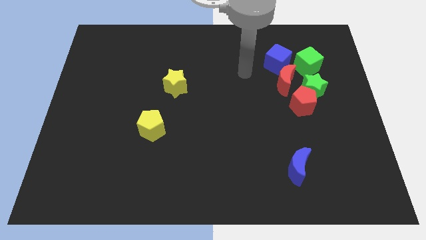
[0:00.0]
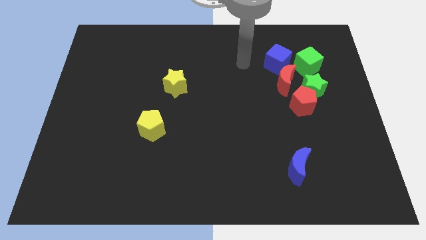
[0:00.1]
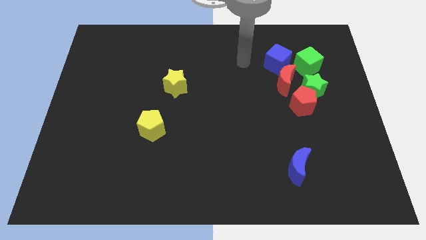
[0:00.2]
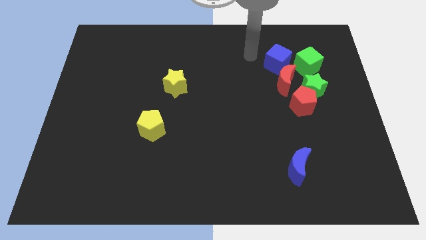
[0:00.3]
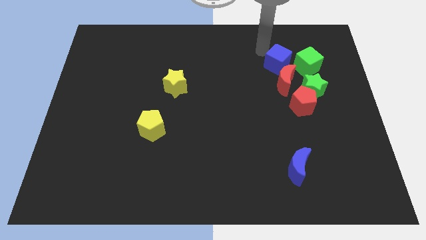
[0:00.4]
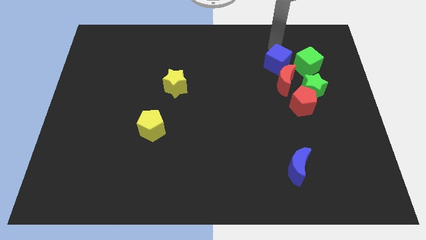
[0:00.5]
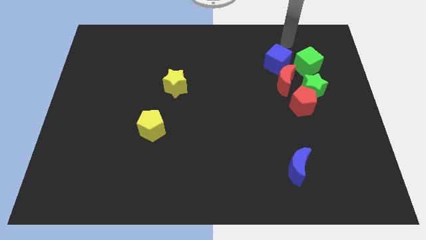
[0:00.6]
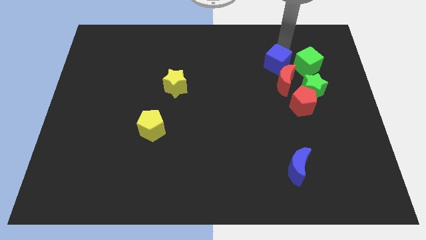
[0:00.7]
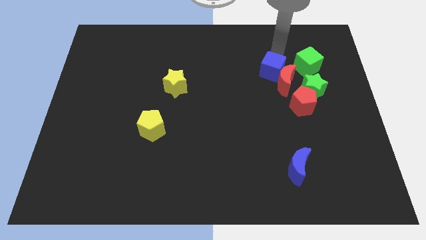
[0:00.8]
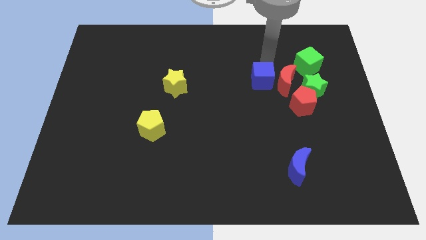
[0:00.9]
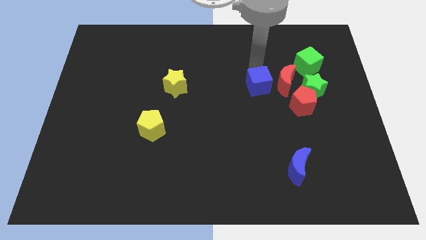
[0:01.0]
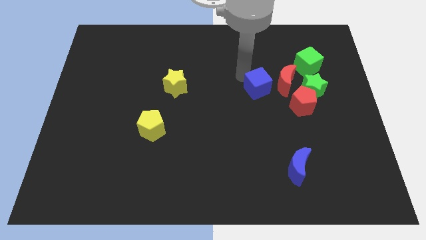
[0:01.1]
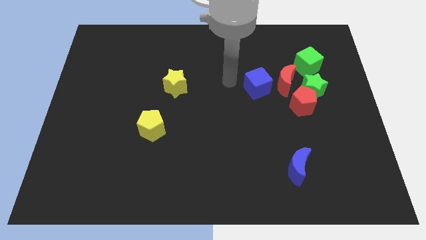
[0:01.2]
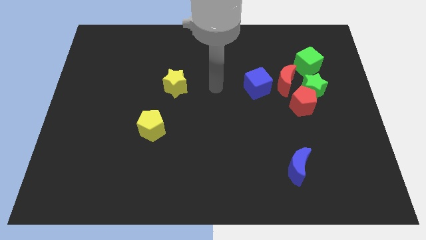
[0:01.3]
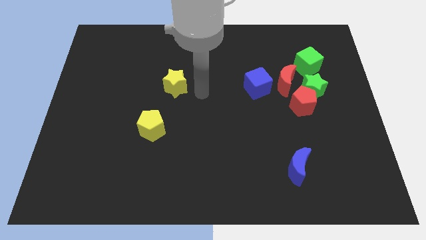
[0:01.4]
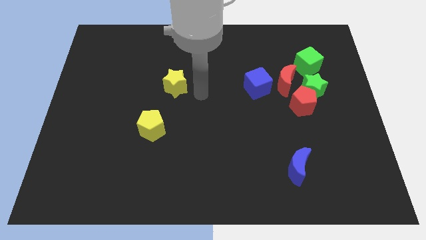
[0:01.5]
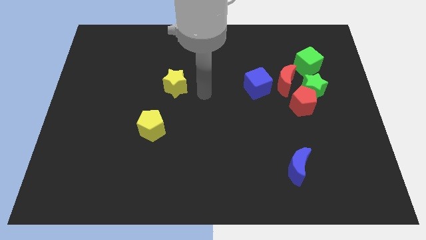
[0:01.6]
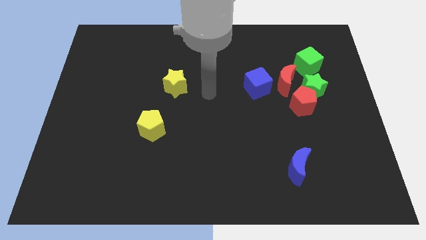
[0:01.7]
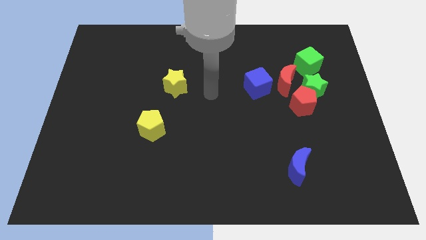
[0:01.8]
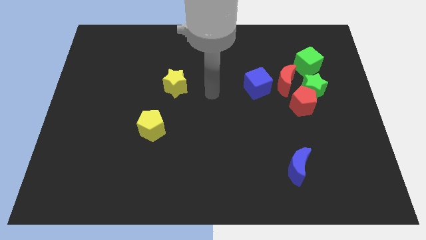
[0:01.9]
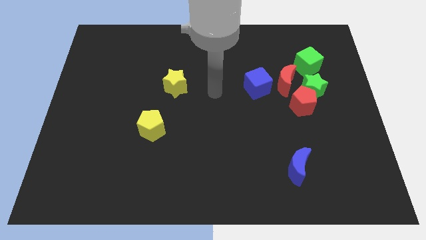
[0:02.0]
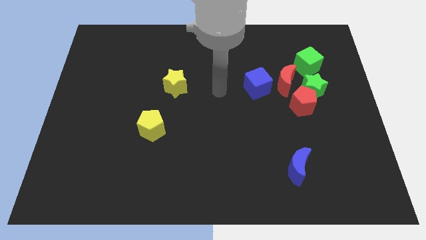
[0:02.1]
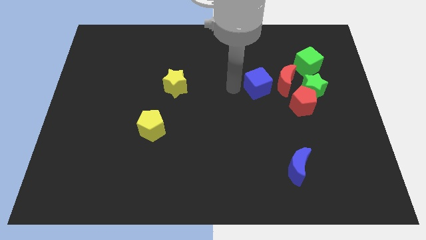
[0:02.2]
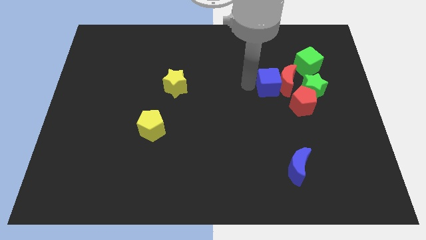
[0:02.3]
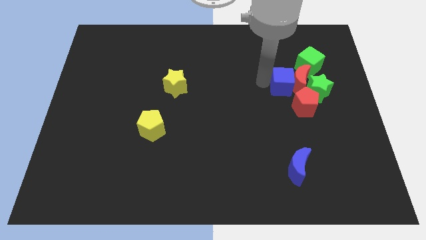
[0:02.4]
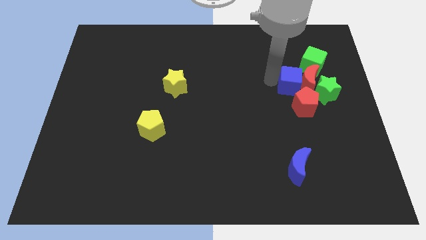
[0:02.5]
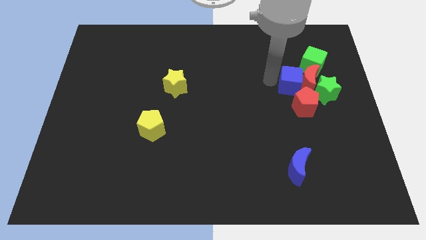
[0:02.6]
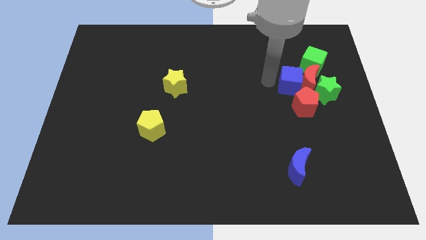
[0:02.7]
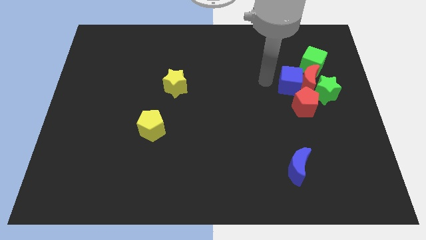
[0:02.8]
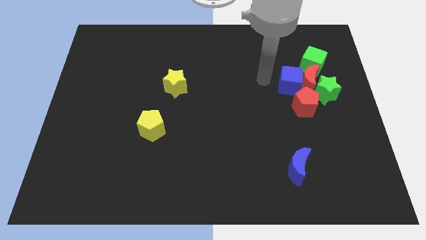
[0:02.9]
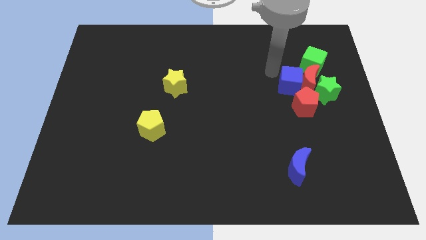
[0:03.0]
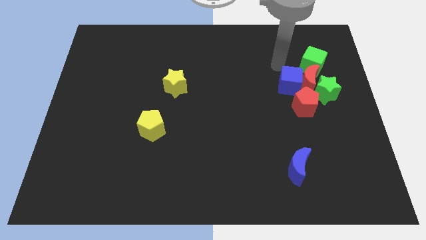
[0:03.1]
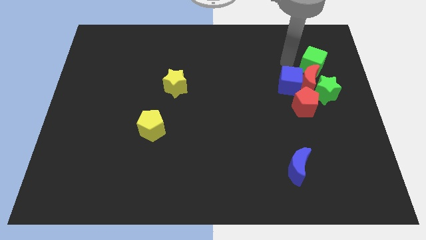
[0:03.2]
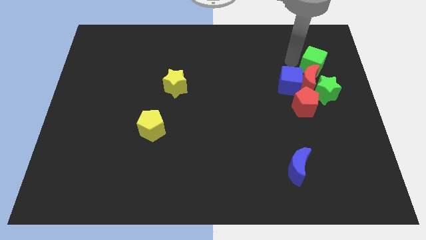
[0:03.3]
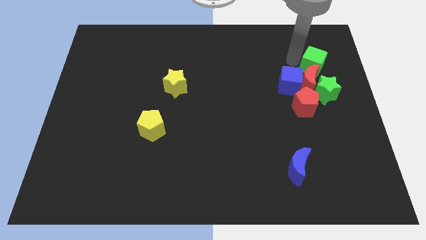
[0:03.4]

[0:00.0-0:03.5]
push the blue cube into red moon

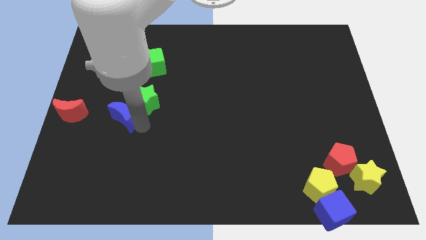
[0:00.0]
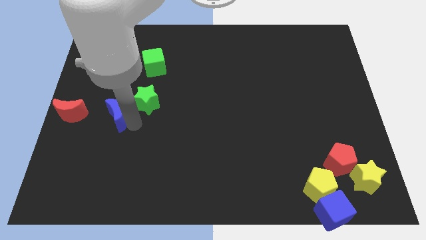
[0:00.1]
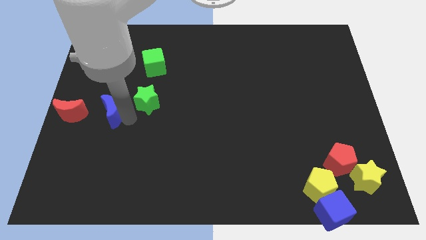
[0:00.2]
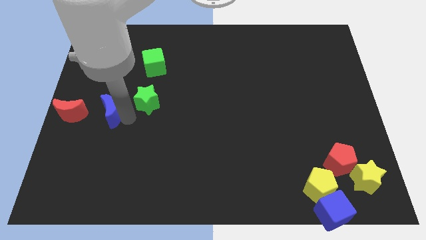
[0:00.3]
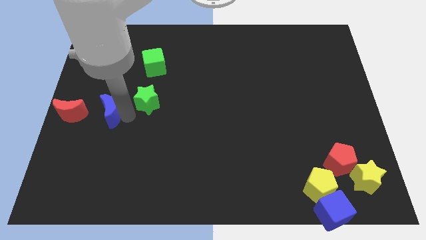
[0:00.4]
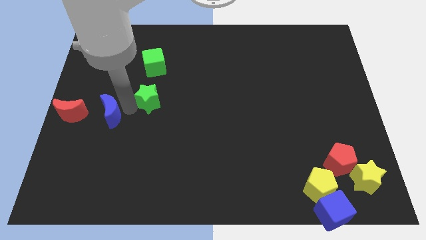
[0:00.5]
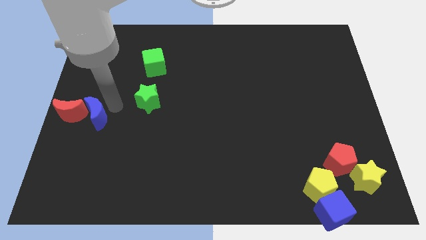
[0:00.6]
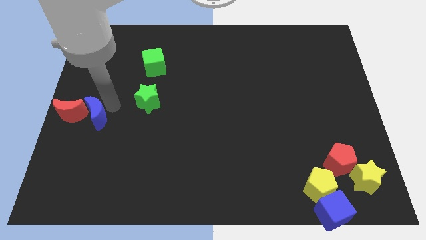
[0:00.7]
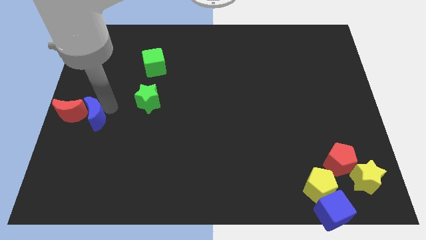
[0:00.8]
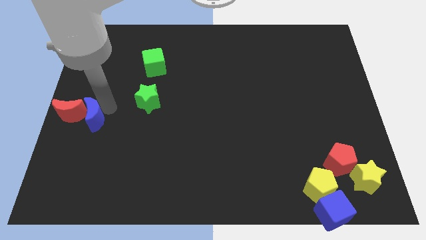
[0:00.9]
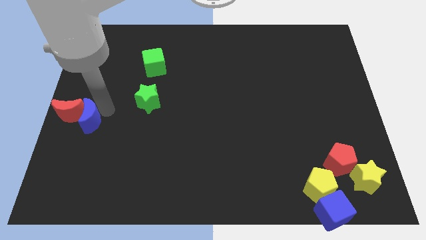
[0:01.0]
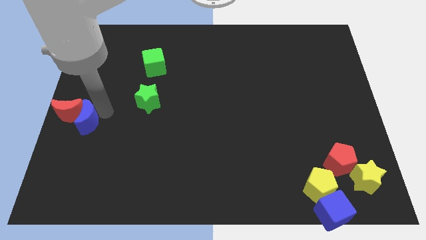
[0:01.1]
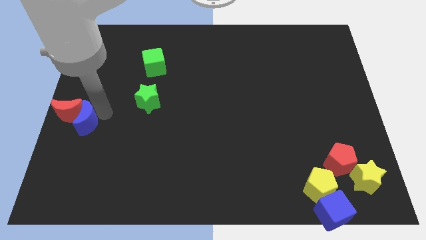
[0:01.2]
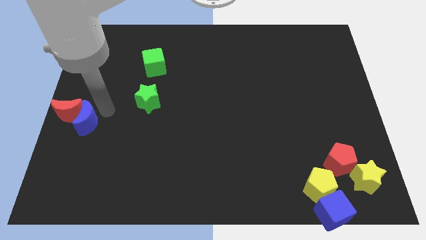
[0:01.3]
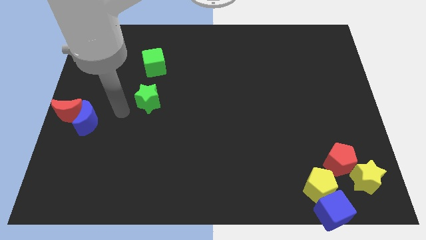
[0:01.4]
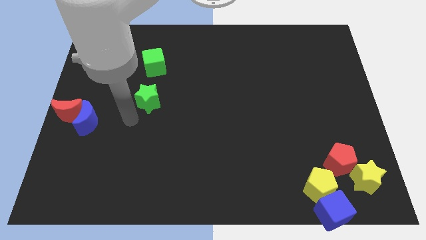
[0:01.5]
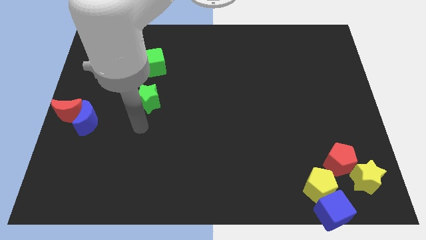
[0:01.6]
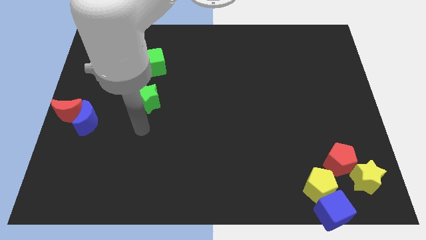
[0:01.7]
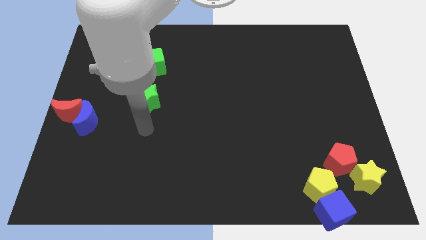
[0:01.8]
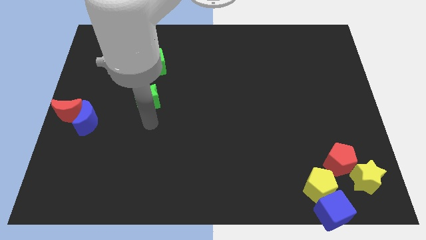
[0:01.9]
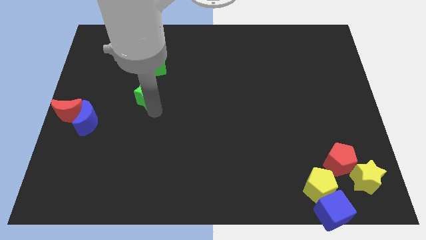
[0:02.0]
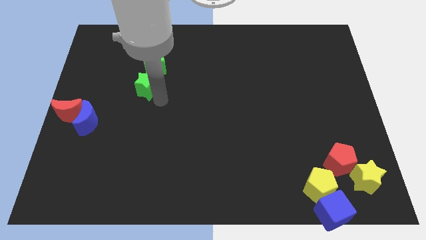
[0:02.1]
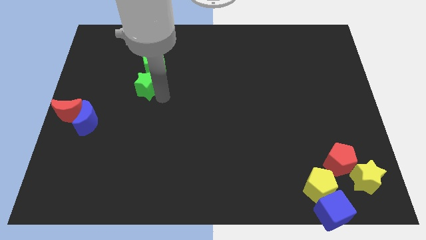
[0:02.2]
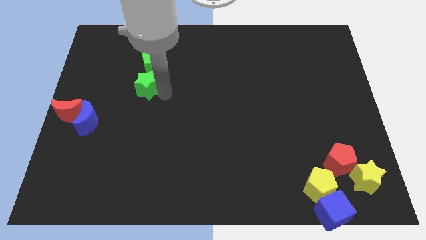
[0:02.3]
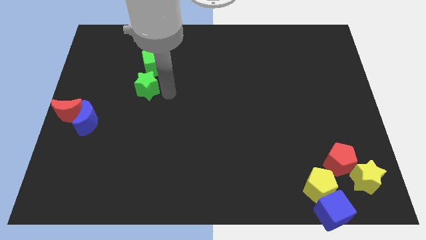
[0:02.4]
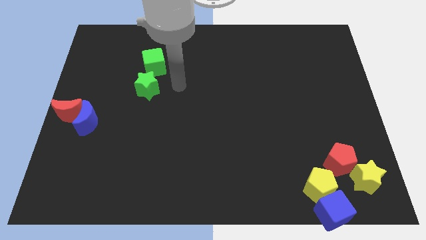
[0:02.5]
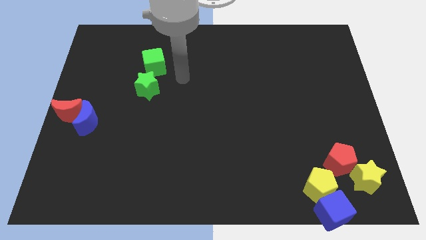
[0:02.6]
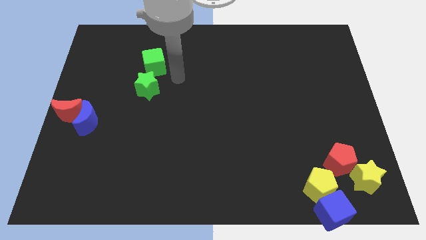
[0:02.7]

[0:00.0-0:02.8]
push the green star down to the green cube

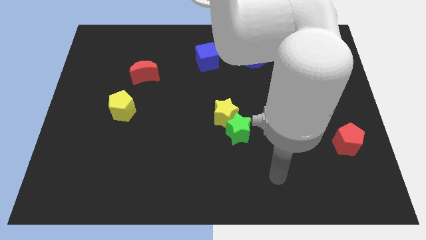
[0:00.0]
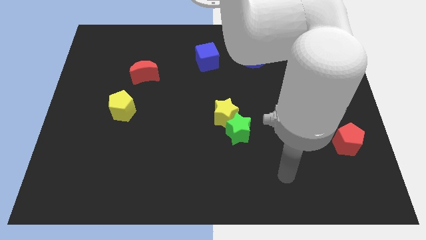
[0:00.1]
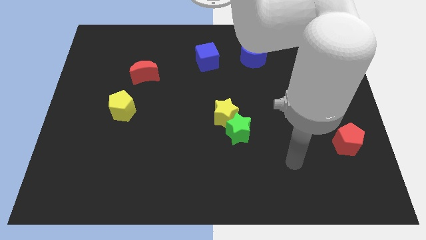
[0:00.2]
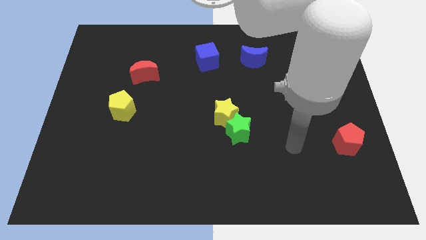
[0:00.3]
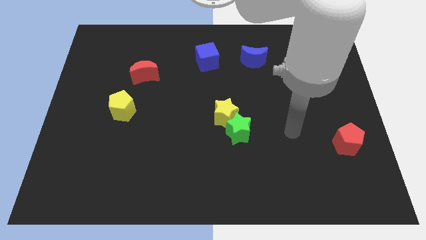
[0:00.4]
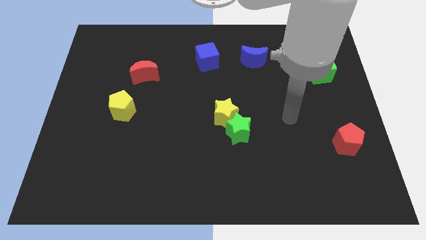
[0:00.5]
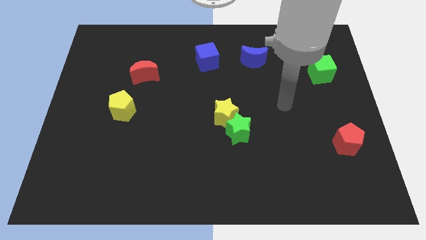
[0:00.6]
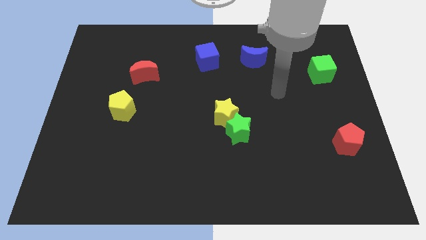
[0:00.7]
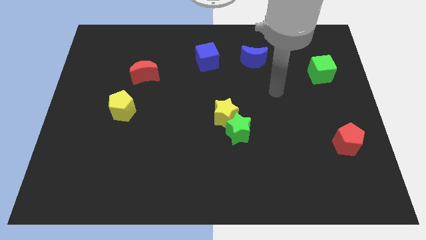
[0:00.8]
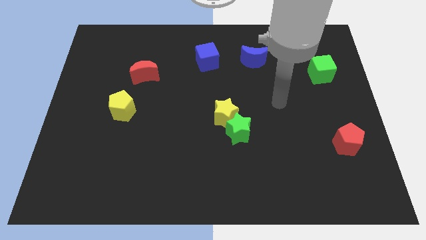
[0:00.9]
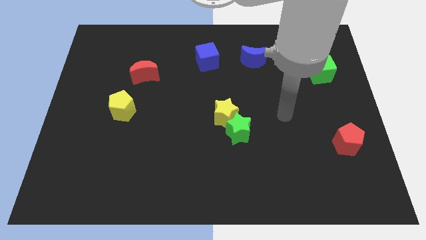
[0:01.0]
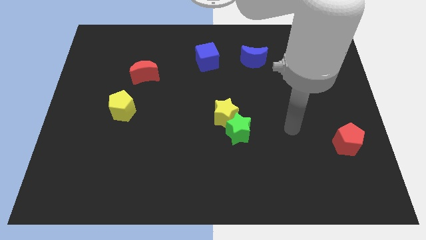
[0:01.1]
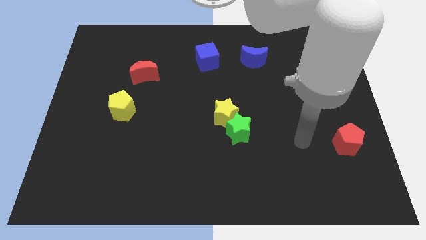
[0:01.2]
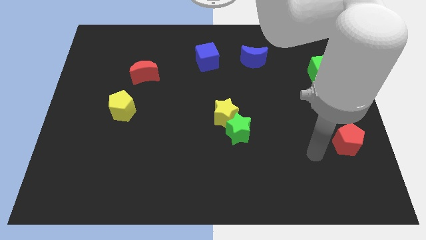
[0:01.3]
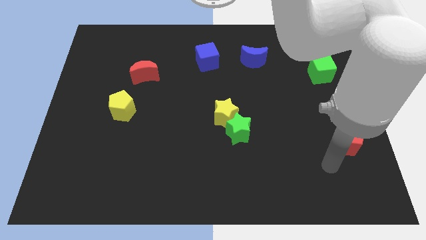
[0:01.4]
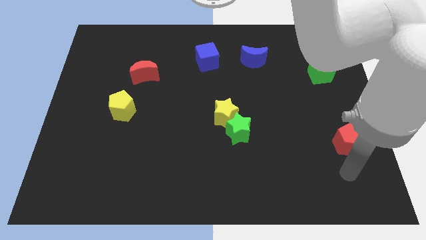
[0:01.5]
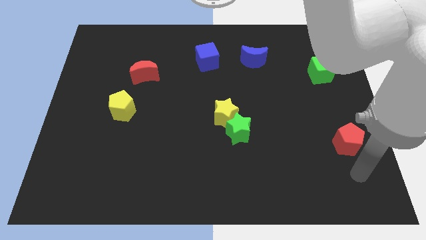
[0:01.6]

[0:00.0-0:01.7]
point your arm at the bottom of red pentagon

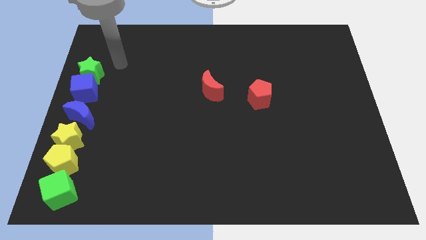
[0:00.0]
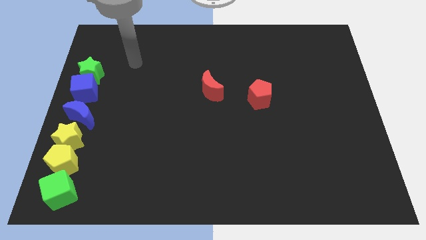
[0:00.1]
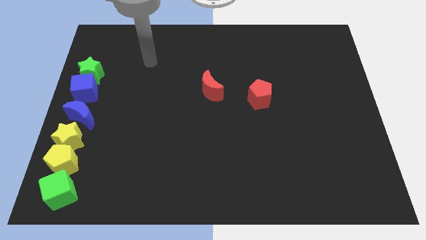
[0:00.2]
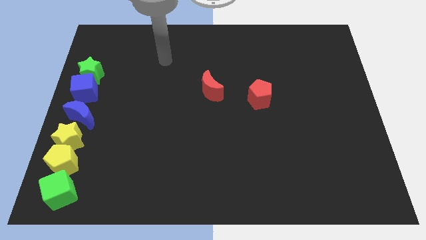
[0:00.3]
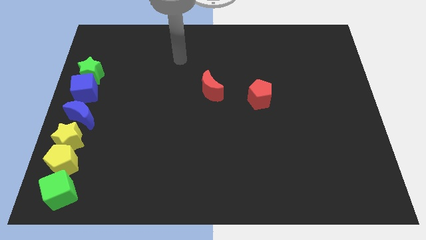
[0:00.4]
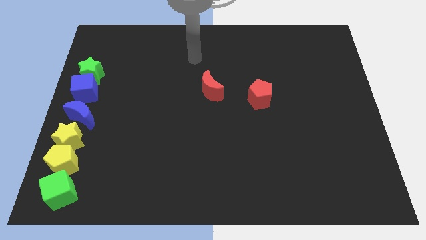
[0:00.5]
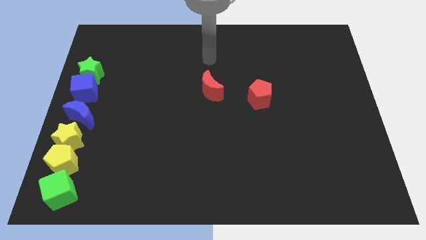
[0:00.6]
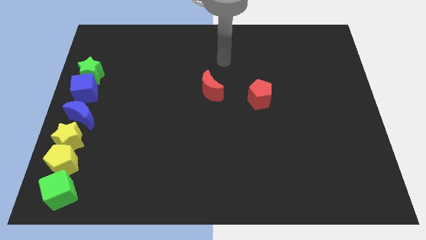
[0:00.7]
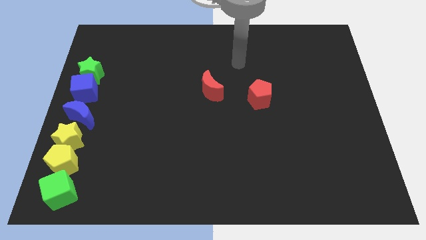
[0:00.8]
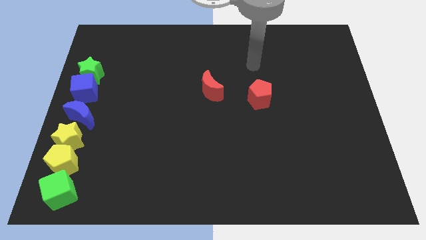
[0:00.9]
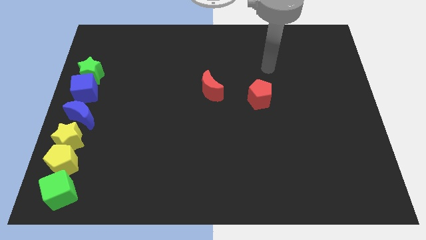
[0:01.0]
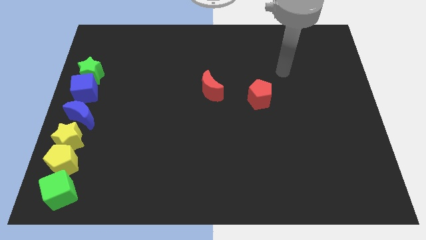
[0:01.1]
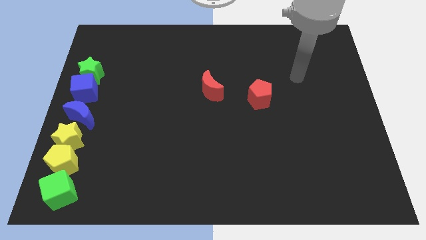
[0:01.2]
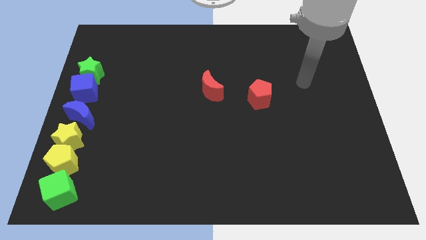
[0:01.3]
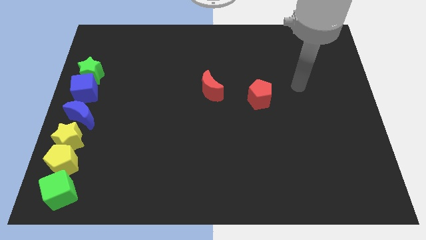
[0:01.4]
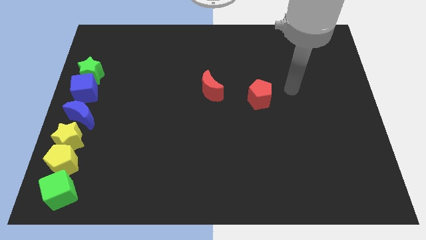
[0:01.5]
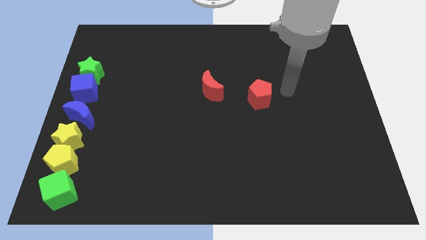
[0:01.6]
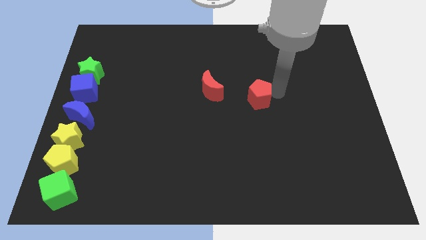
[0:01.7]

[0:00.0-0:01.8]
point your arm at the right of the red pentagon
